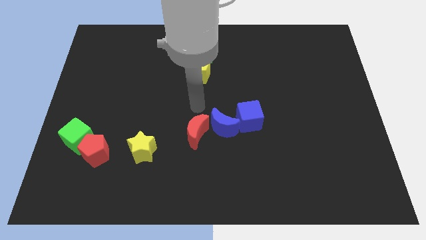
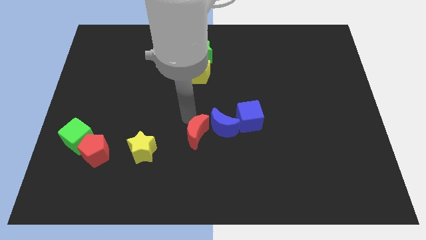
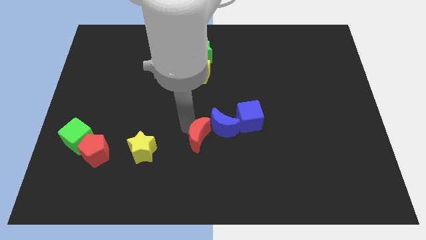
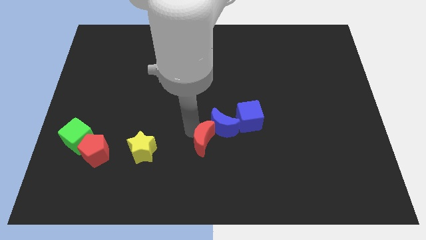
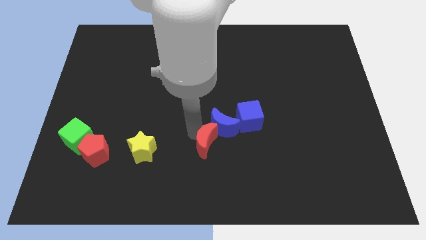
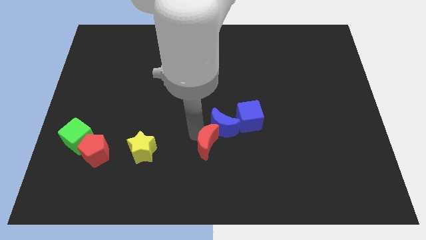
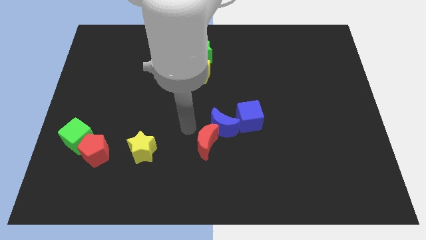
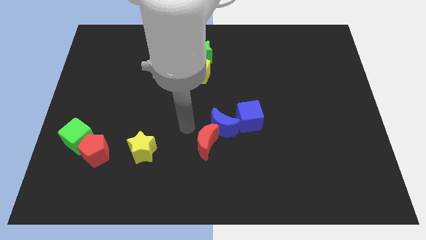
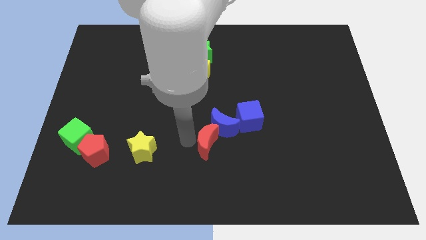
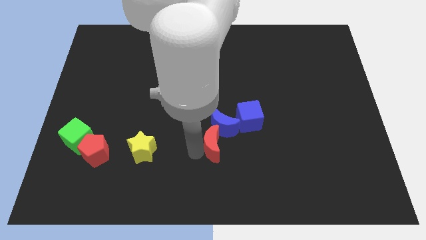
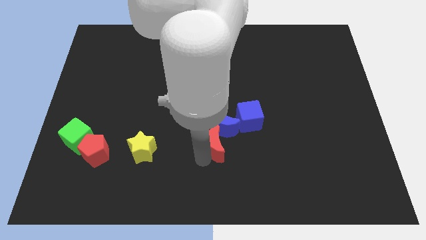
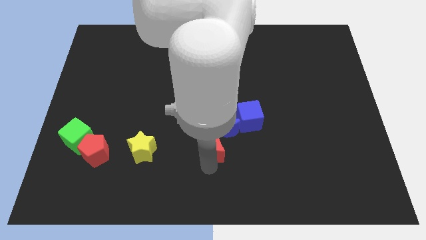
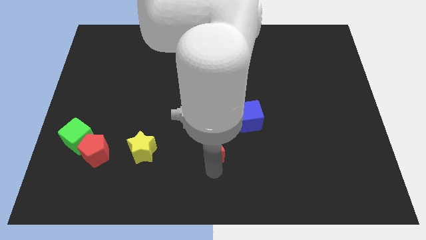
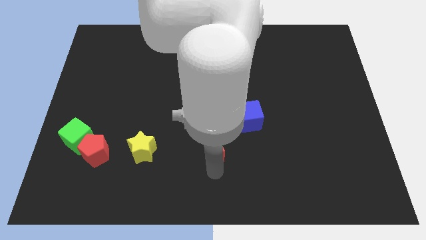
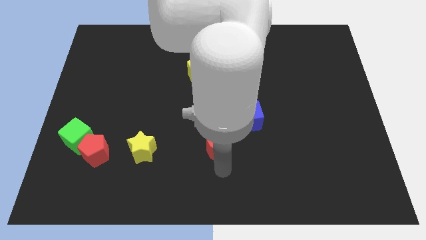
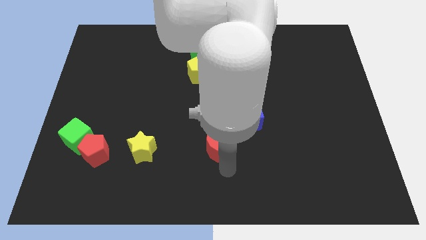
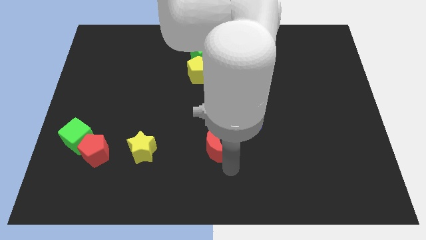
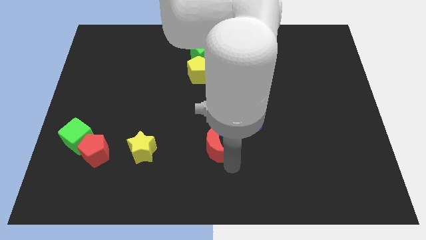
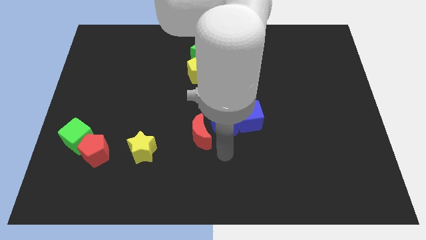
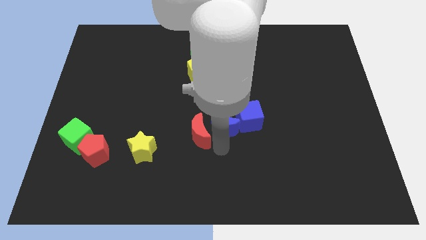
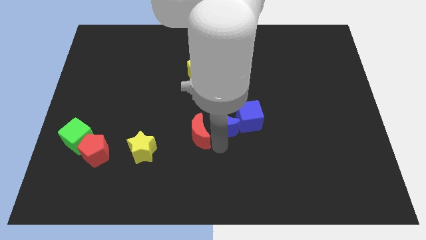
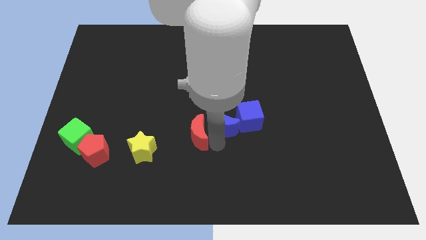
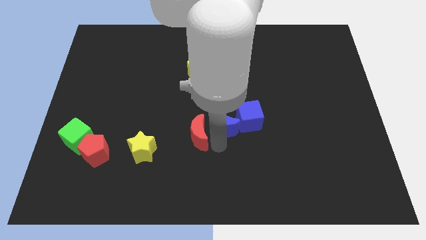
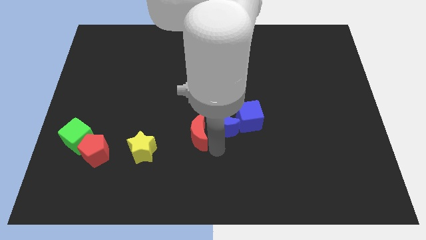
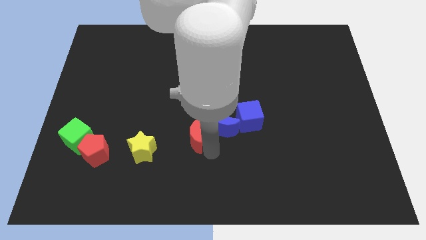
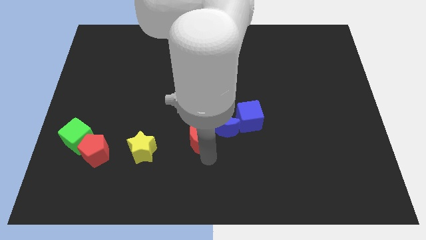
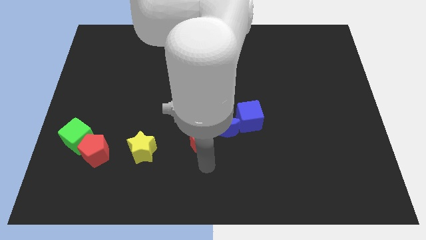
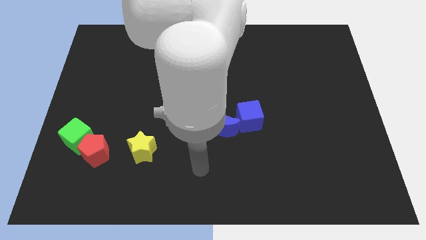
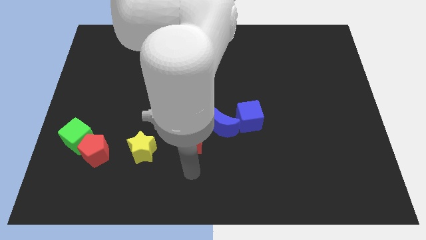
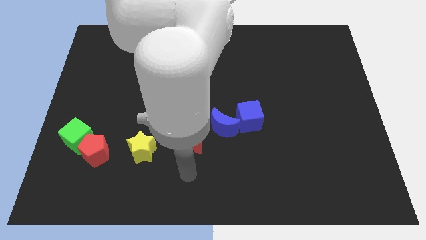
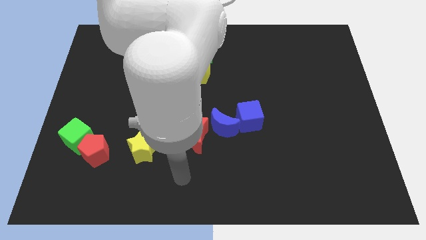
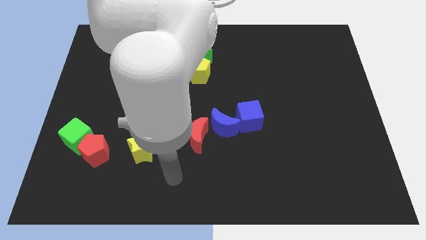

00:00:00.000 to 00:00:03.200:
adjust the red crescent left side of the blue crescent

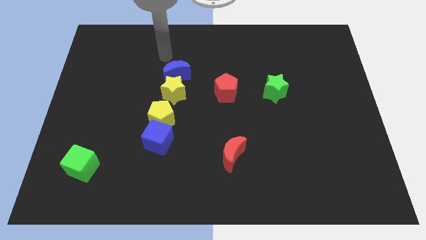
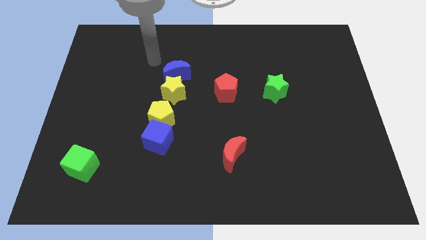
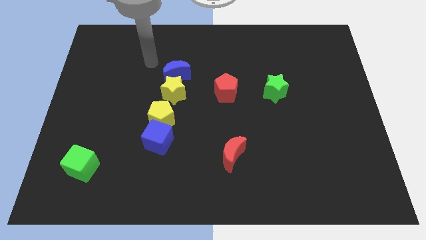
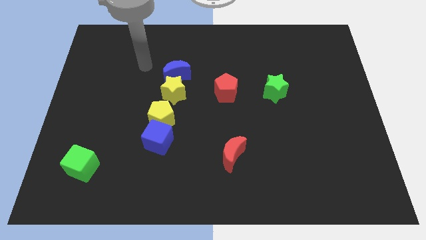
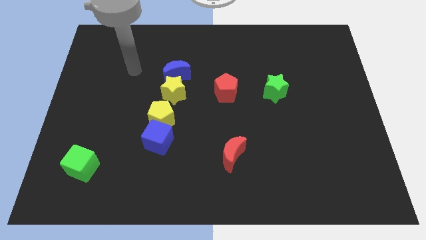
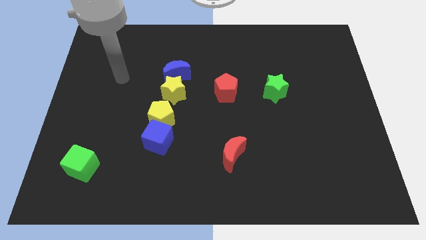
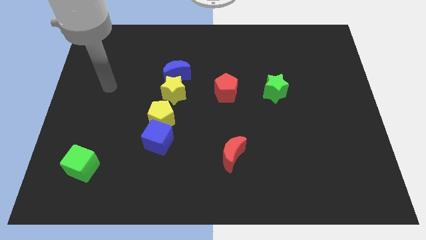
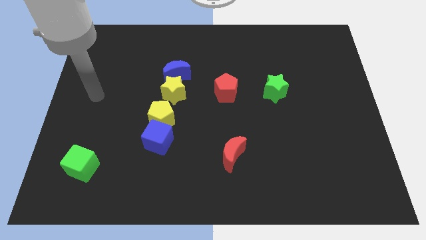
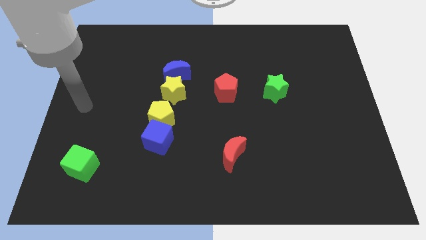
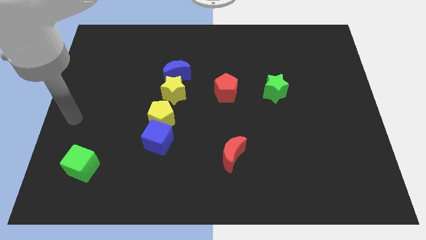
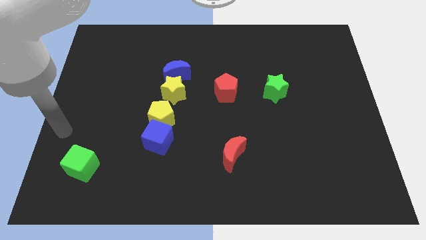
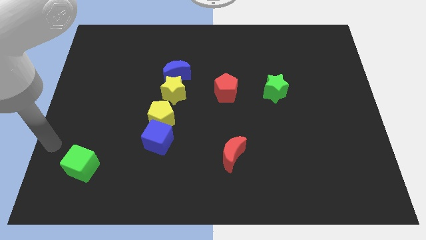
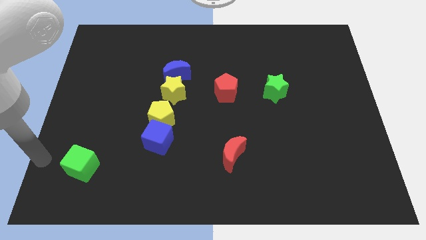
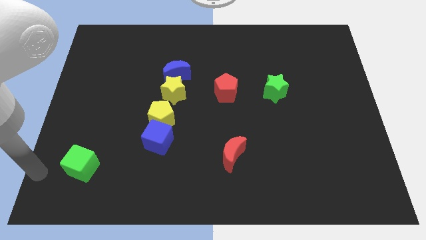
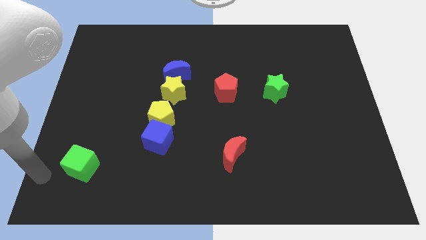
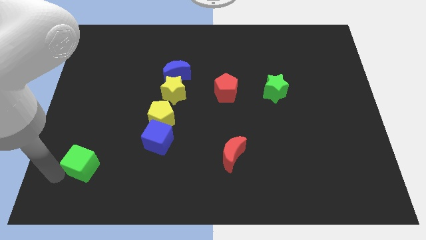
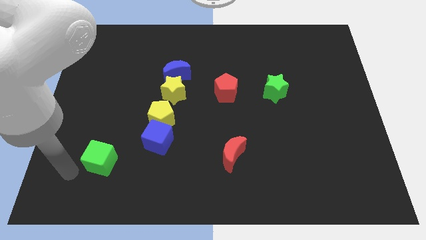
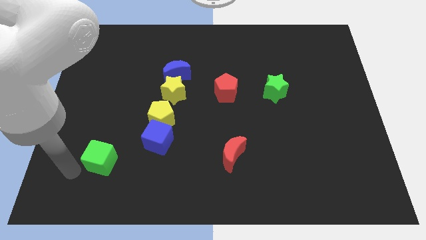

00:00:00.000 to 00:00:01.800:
move your arm towards the green cube

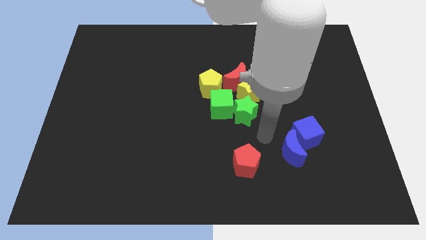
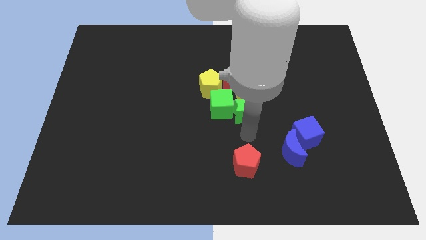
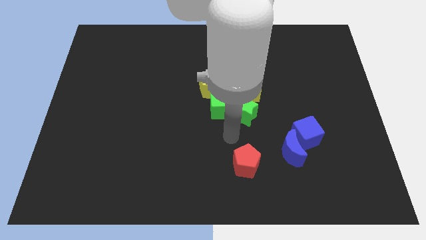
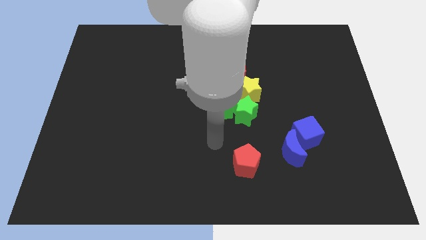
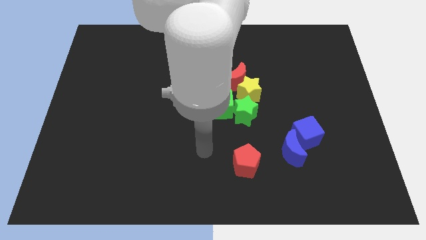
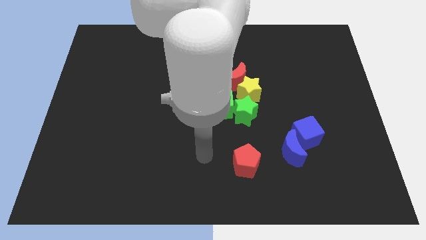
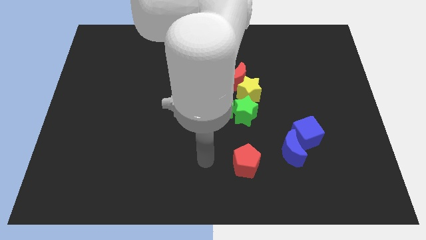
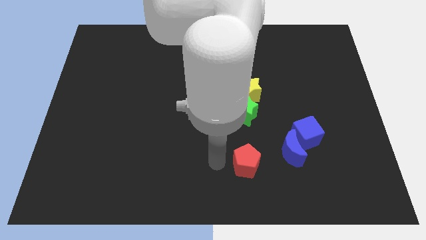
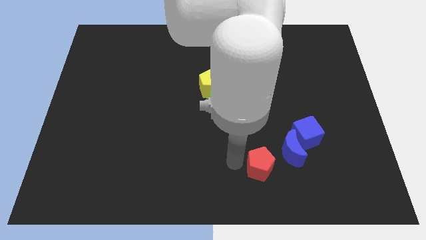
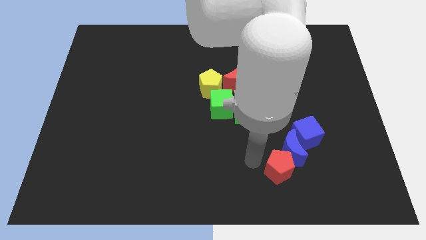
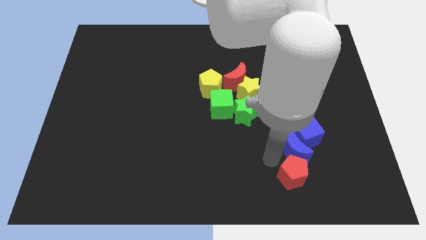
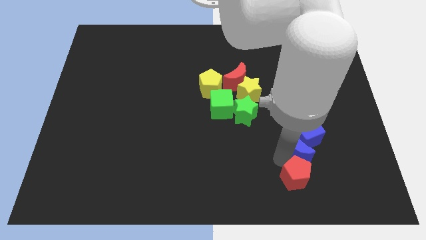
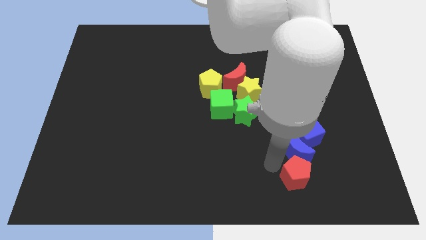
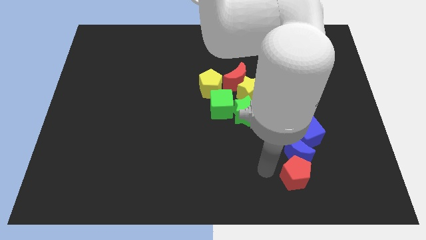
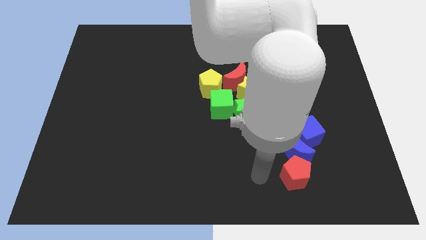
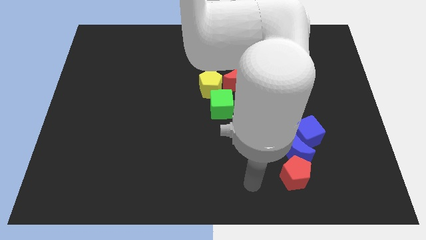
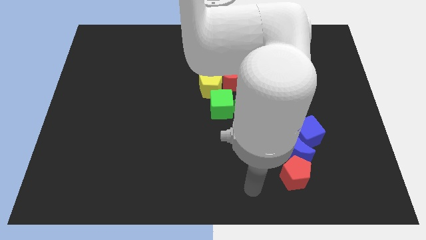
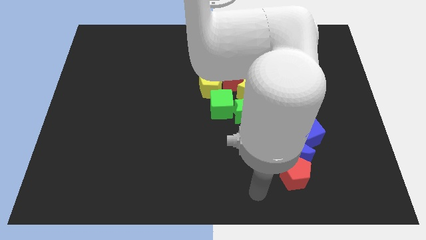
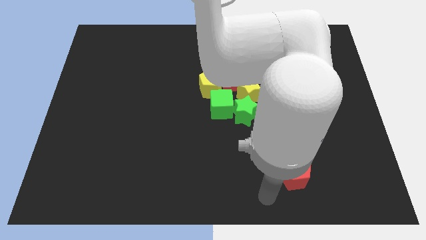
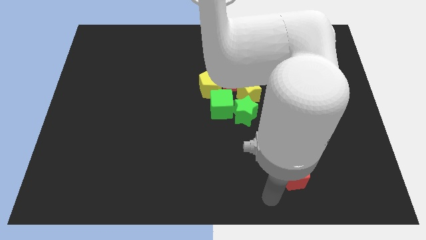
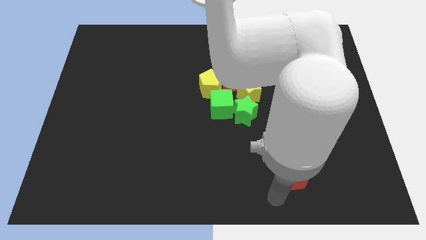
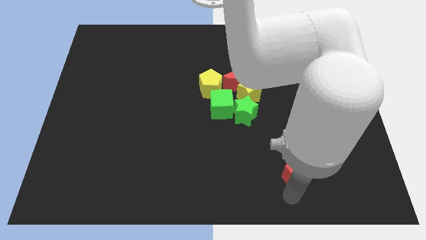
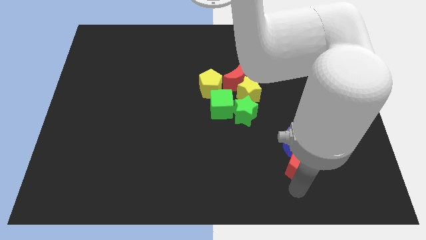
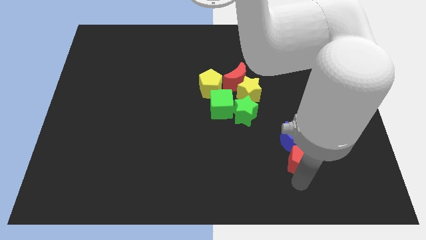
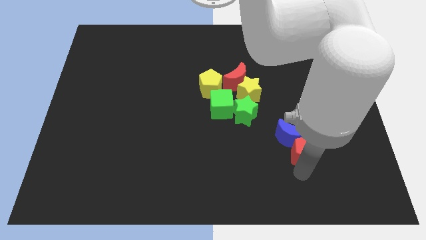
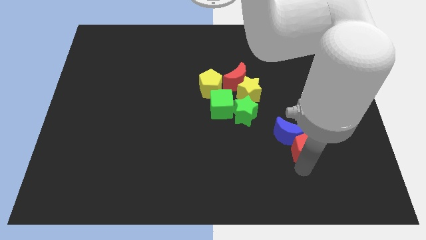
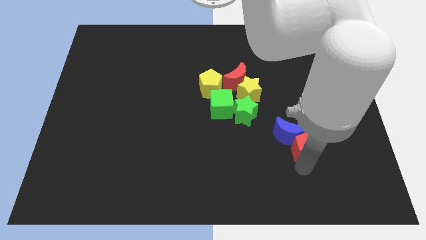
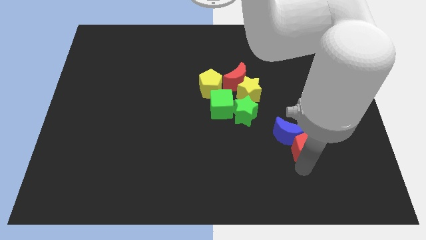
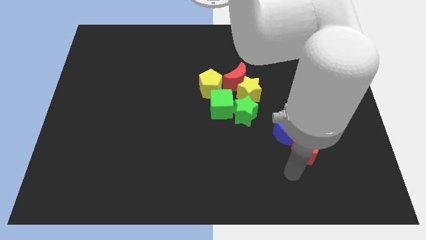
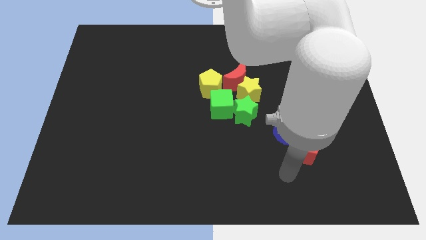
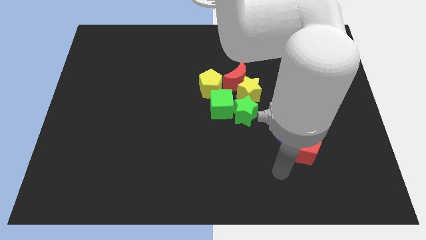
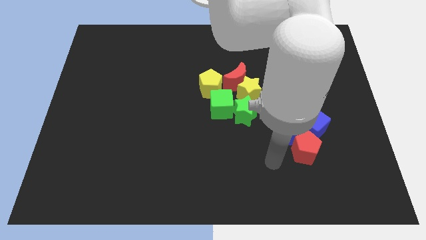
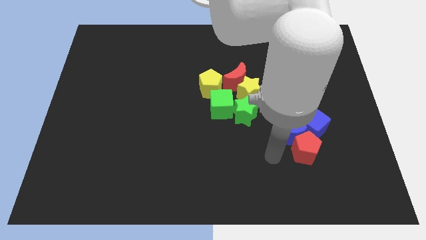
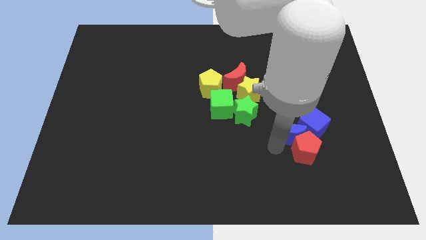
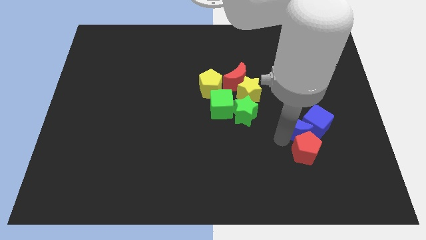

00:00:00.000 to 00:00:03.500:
push the red pentagon into blue cubes

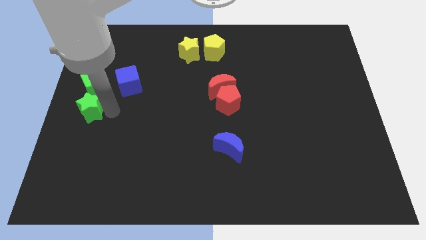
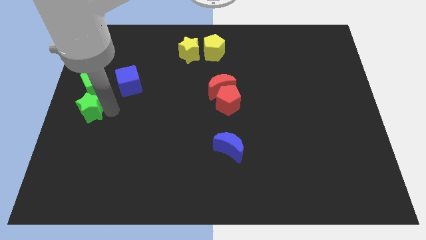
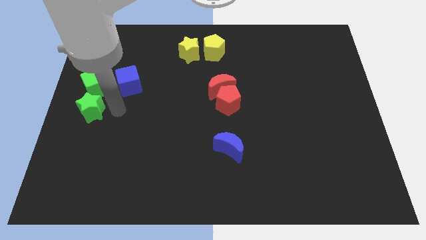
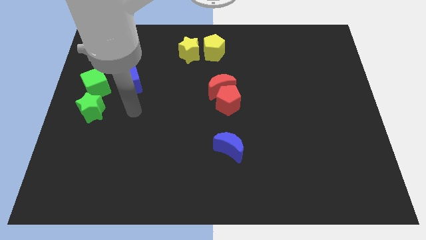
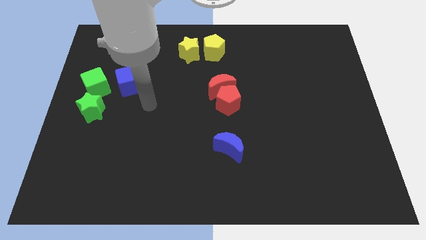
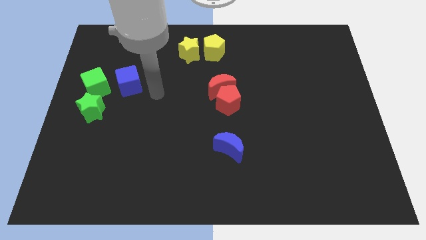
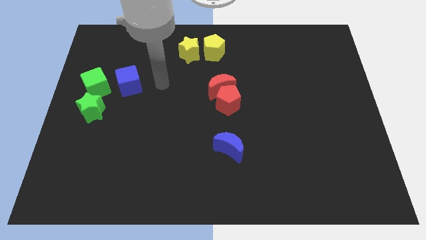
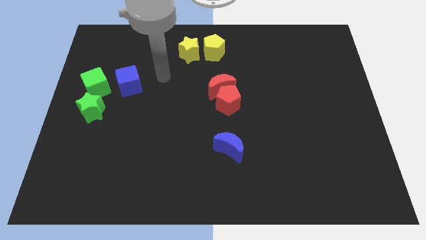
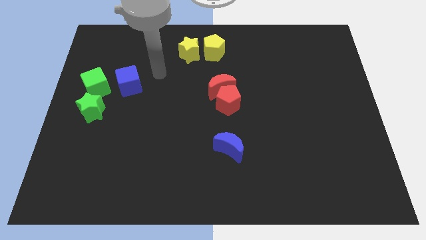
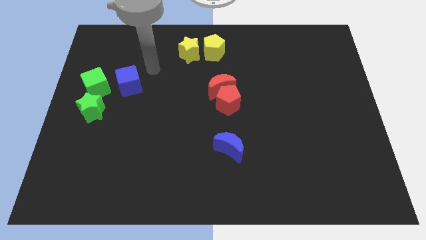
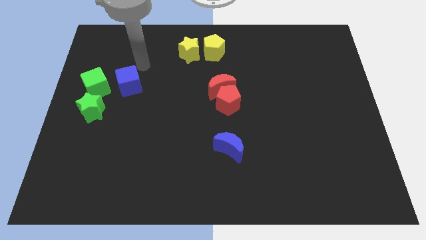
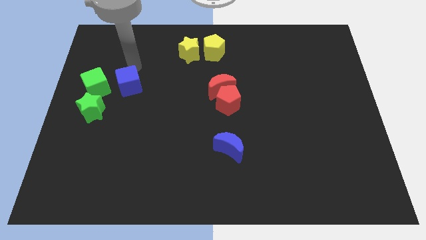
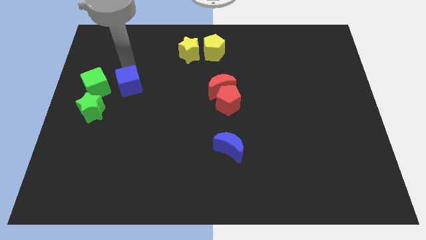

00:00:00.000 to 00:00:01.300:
move your arm away from the green star
